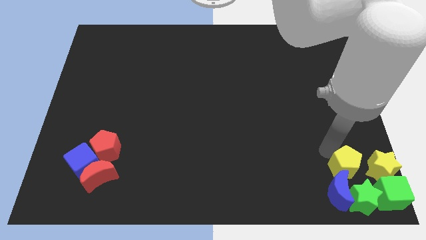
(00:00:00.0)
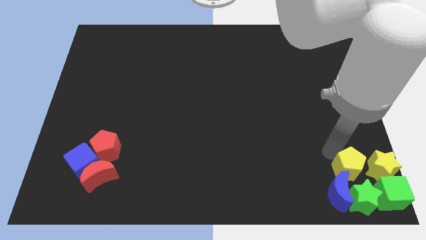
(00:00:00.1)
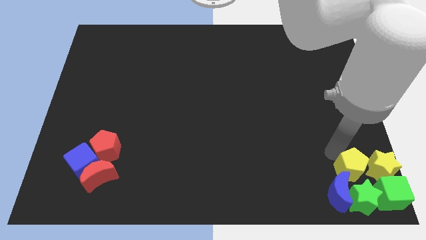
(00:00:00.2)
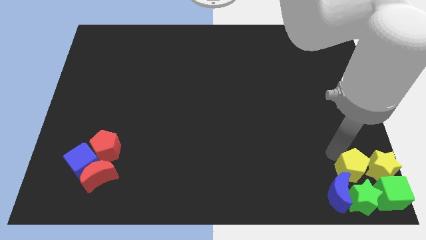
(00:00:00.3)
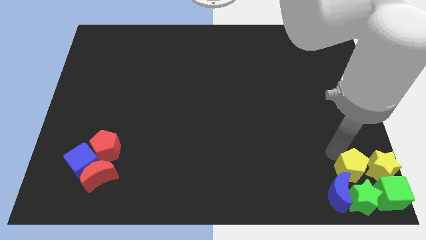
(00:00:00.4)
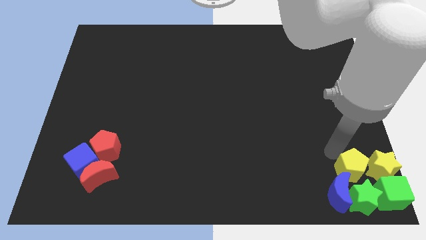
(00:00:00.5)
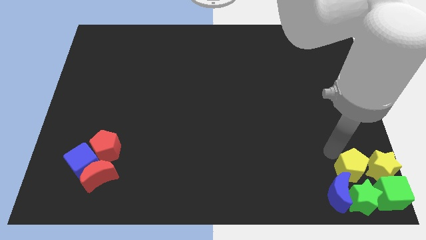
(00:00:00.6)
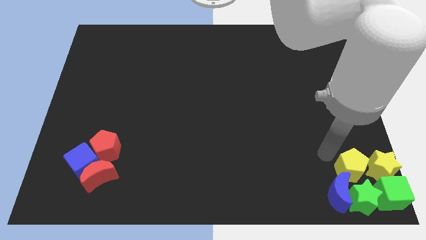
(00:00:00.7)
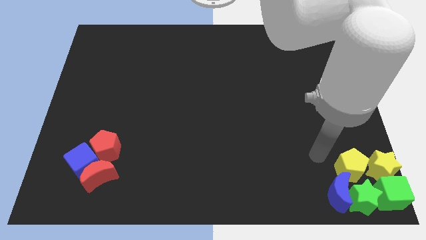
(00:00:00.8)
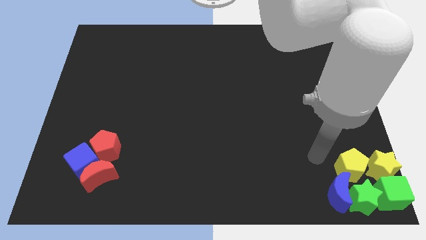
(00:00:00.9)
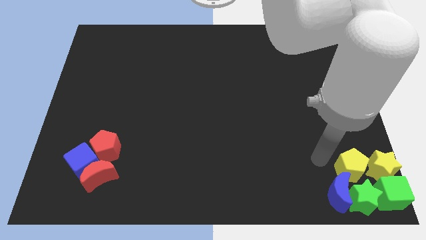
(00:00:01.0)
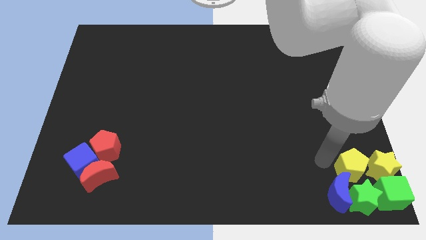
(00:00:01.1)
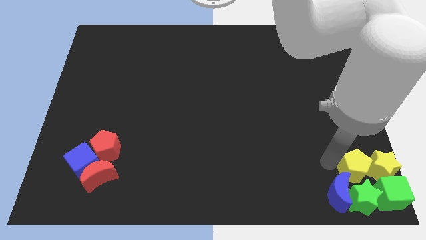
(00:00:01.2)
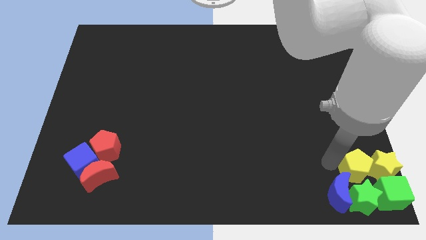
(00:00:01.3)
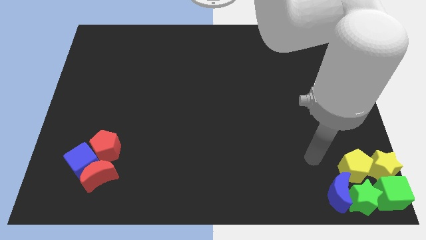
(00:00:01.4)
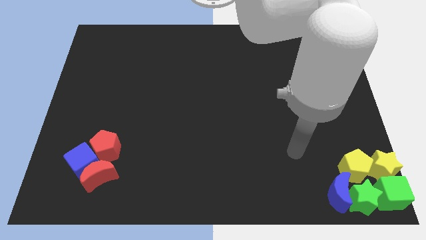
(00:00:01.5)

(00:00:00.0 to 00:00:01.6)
push the yellow pentagon closer to the left of the yellow star

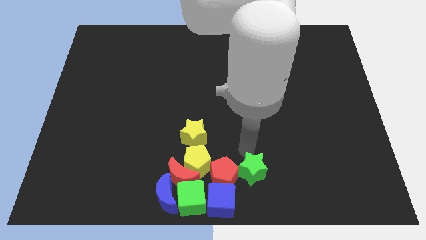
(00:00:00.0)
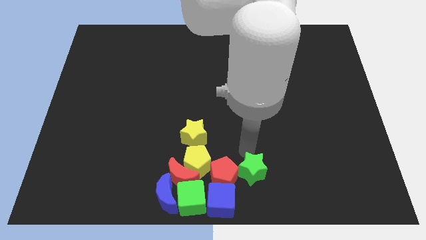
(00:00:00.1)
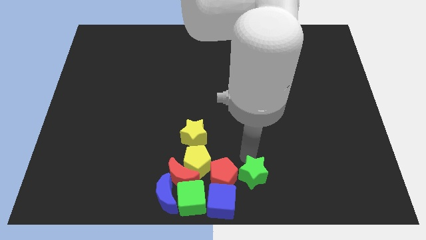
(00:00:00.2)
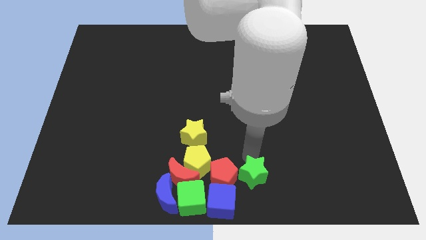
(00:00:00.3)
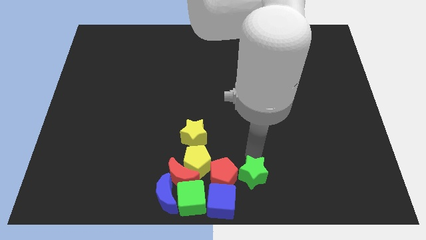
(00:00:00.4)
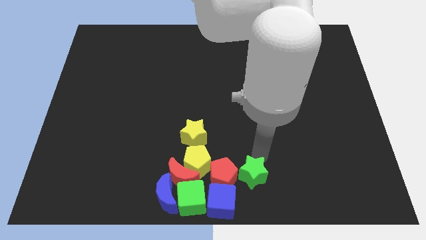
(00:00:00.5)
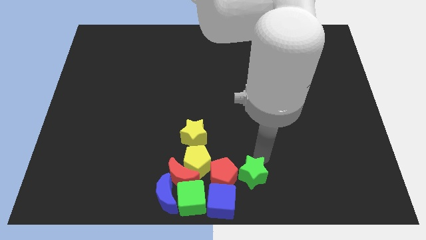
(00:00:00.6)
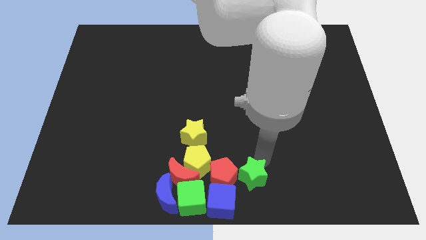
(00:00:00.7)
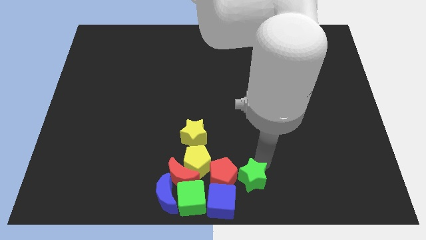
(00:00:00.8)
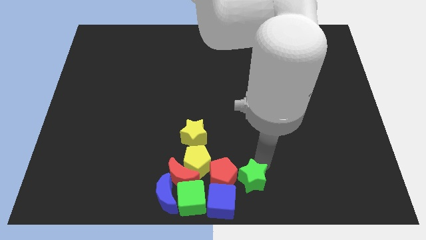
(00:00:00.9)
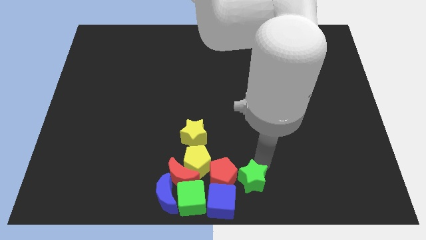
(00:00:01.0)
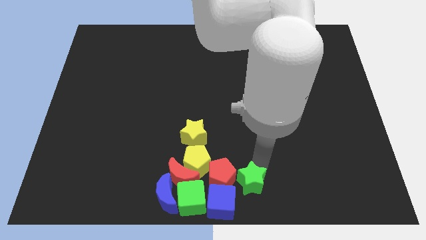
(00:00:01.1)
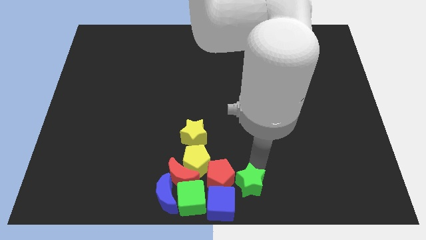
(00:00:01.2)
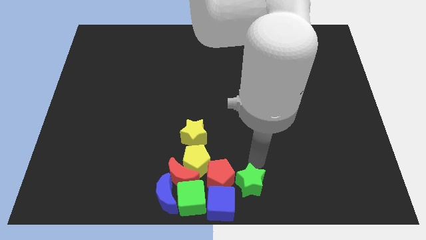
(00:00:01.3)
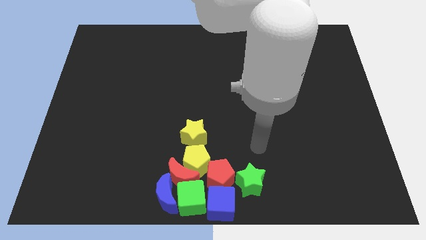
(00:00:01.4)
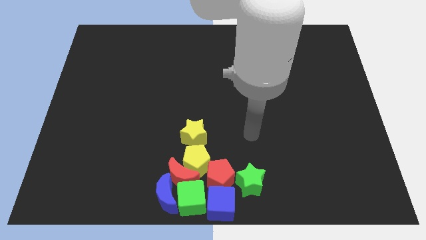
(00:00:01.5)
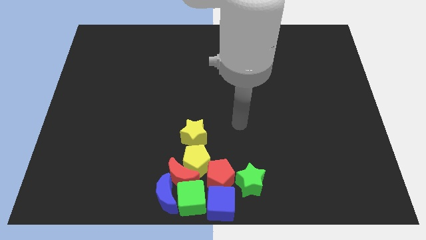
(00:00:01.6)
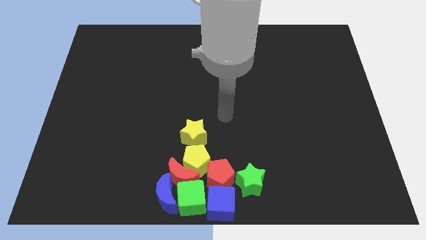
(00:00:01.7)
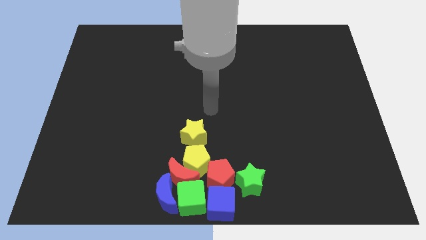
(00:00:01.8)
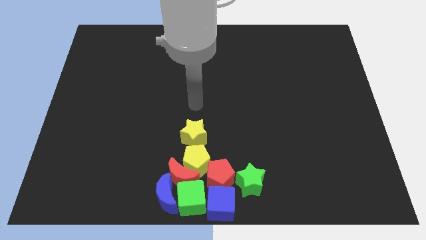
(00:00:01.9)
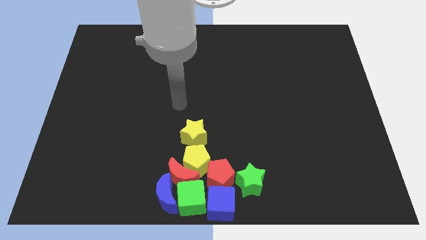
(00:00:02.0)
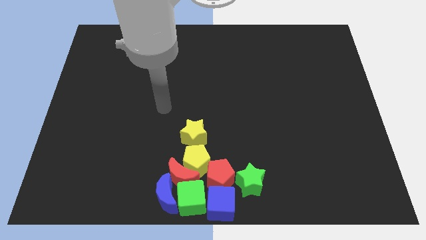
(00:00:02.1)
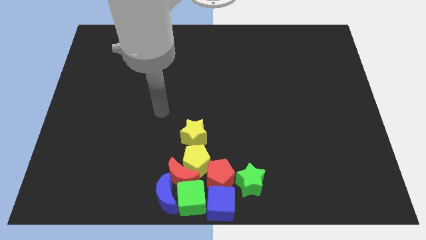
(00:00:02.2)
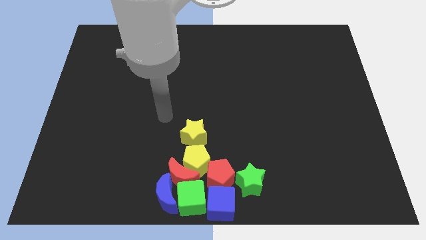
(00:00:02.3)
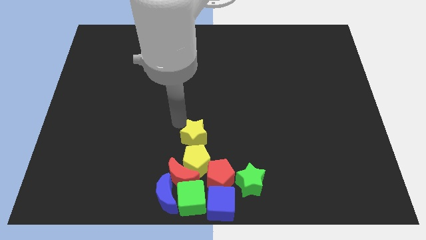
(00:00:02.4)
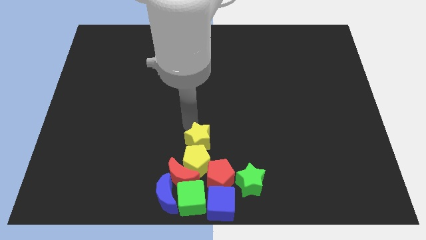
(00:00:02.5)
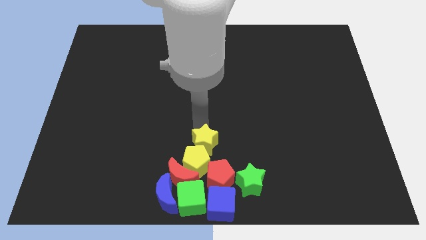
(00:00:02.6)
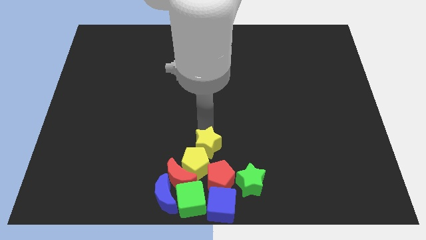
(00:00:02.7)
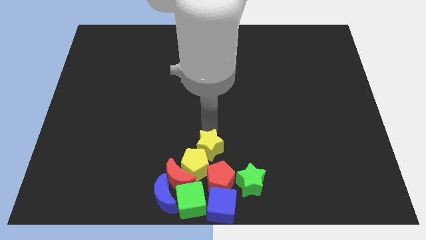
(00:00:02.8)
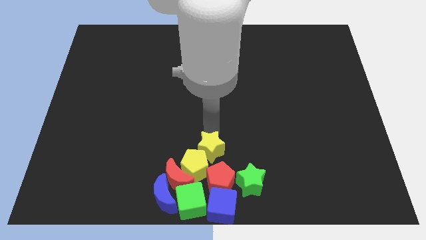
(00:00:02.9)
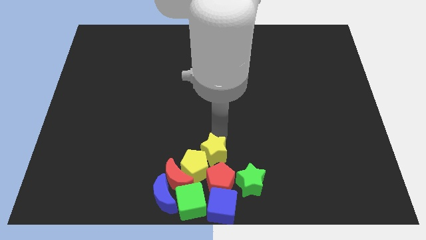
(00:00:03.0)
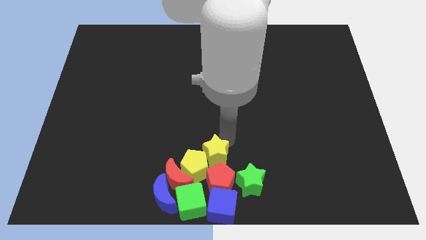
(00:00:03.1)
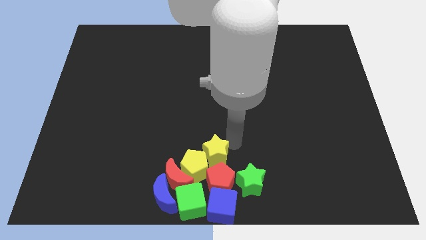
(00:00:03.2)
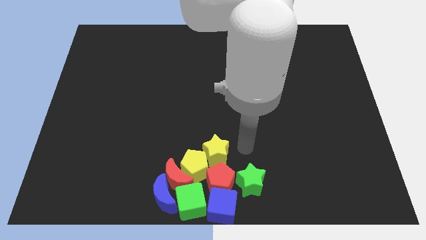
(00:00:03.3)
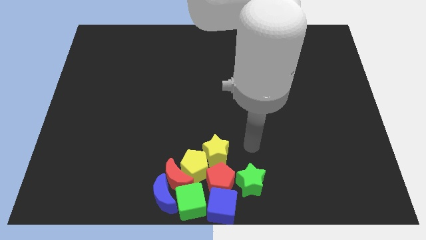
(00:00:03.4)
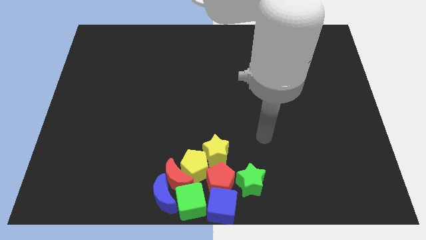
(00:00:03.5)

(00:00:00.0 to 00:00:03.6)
push the yellow star to the top side of the red pentagon

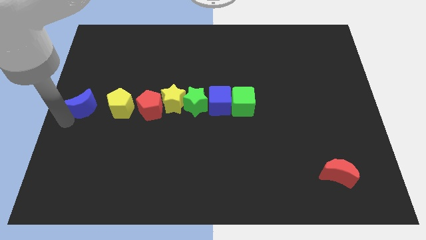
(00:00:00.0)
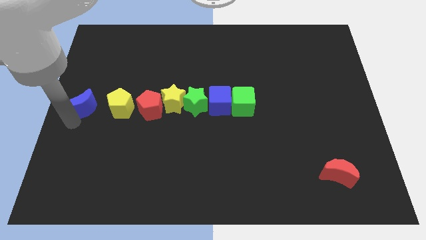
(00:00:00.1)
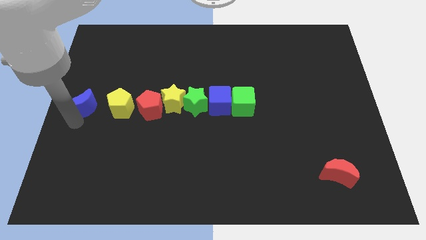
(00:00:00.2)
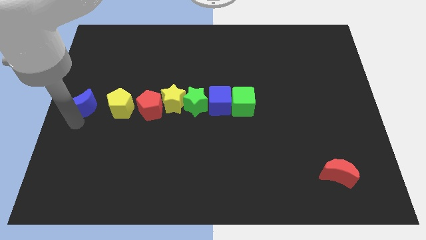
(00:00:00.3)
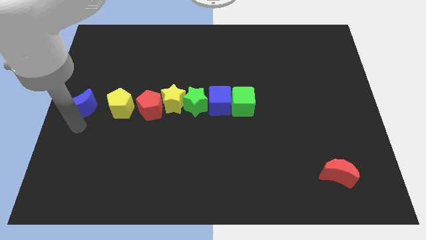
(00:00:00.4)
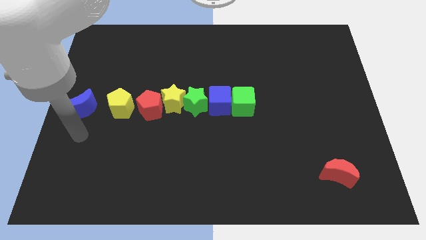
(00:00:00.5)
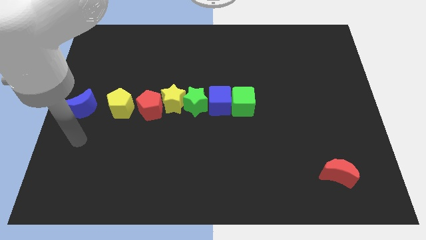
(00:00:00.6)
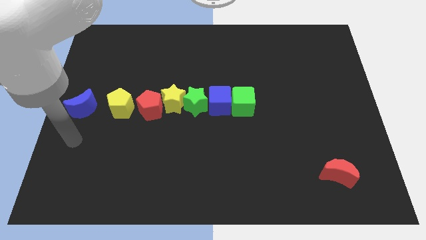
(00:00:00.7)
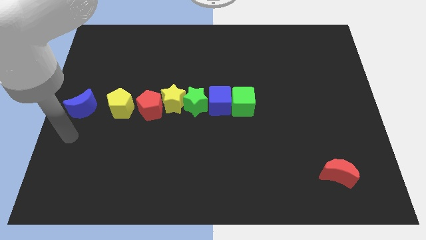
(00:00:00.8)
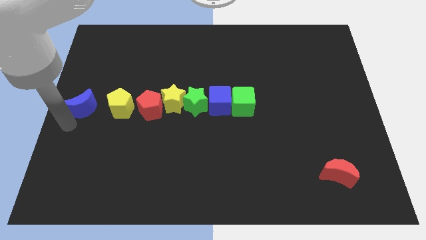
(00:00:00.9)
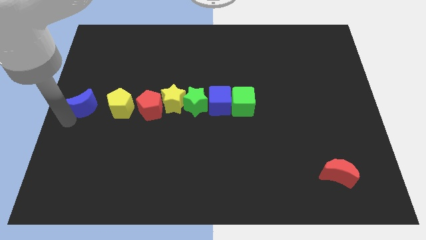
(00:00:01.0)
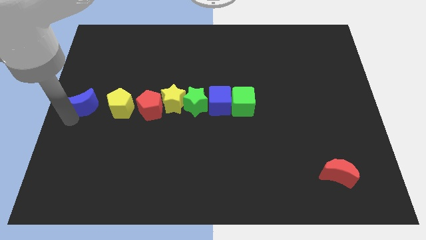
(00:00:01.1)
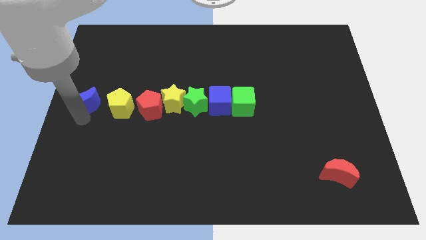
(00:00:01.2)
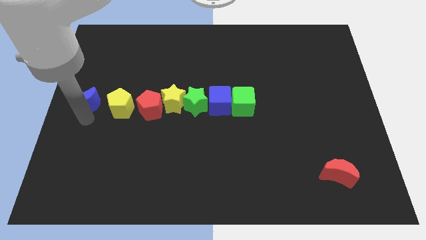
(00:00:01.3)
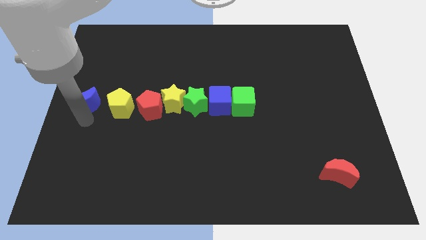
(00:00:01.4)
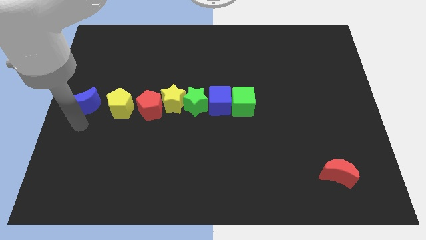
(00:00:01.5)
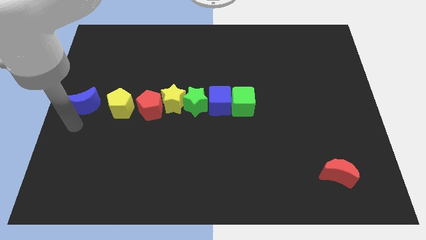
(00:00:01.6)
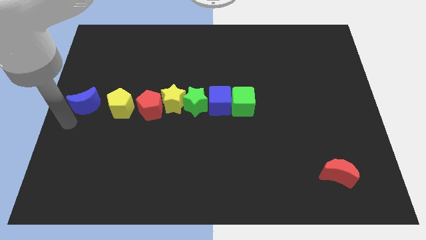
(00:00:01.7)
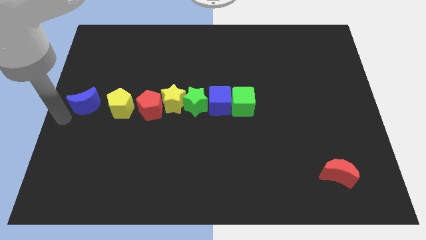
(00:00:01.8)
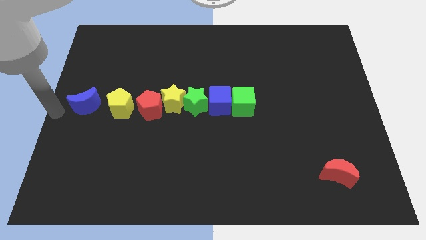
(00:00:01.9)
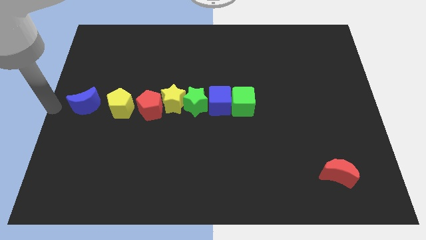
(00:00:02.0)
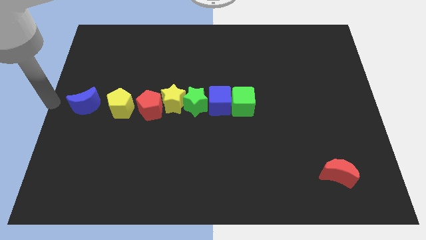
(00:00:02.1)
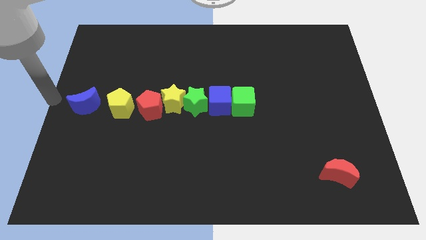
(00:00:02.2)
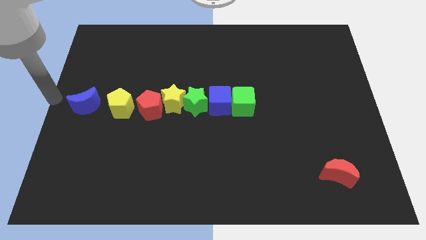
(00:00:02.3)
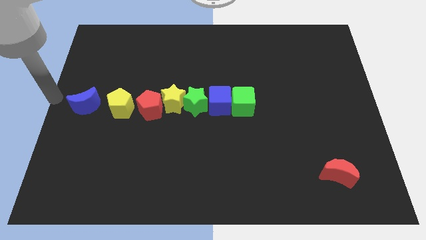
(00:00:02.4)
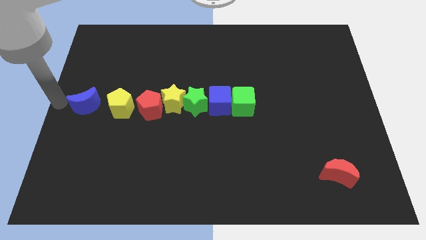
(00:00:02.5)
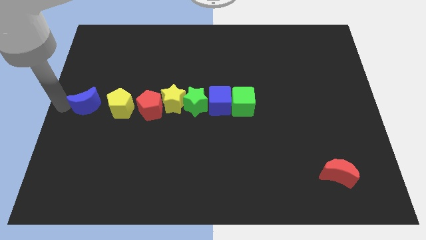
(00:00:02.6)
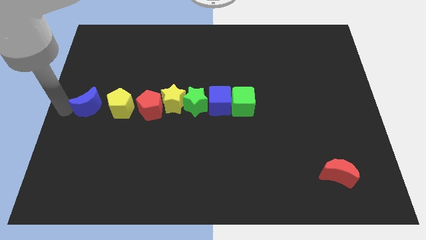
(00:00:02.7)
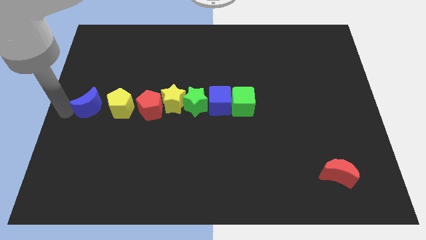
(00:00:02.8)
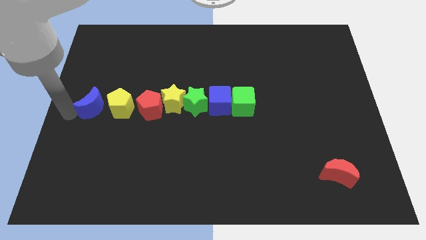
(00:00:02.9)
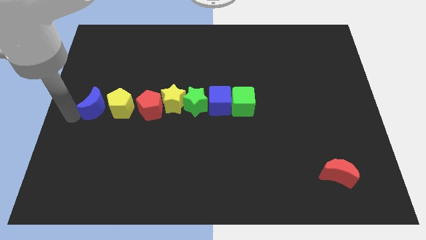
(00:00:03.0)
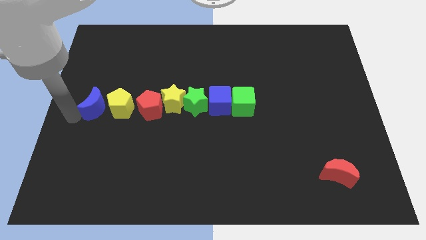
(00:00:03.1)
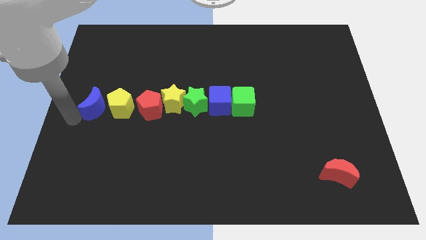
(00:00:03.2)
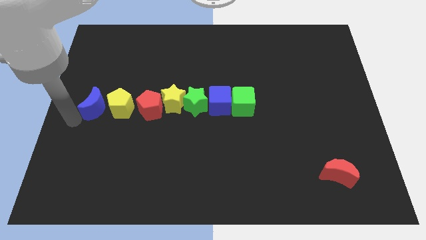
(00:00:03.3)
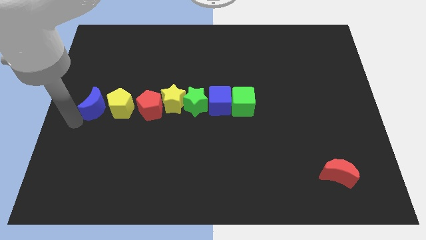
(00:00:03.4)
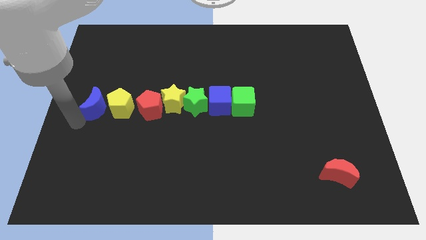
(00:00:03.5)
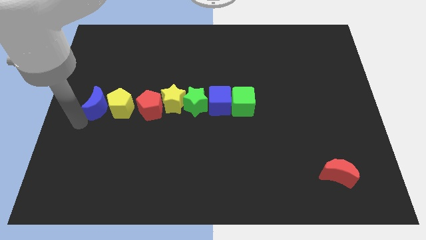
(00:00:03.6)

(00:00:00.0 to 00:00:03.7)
push the blue crescent parallel to the left of the yellow pentagon
